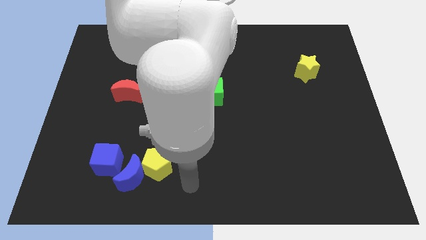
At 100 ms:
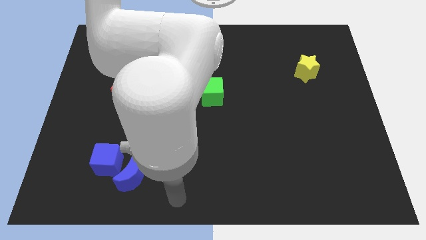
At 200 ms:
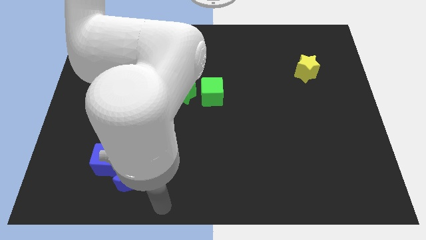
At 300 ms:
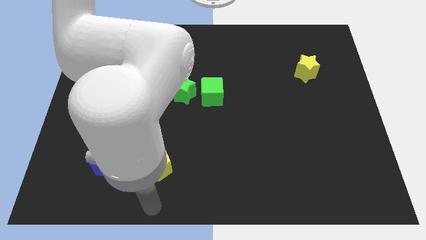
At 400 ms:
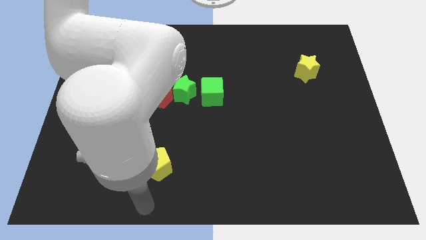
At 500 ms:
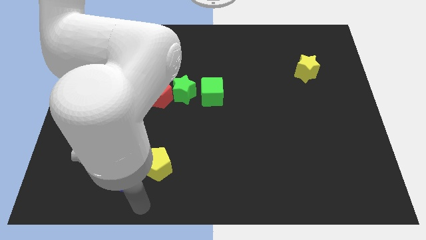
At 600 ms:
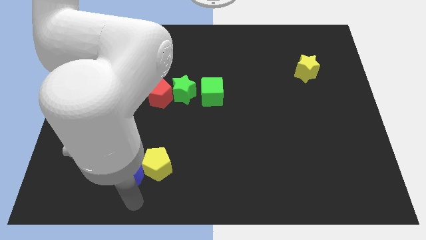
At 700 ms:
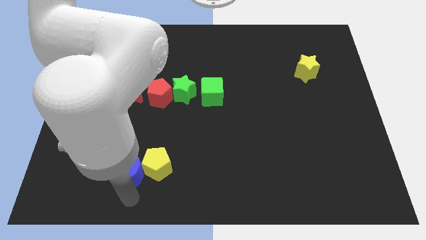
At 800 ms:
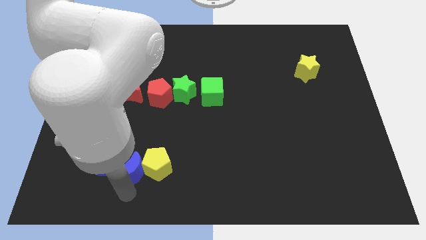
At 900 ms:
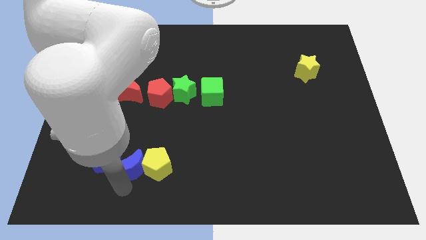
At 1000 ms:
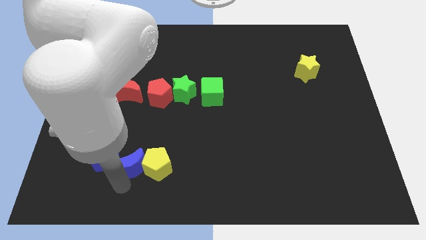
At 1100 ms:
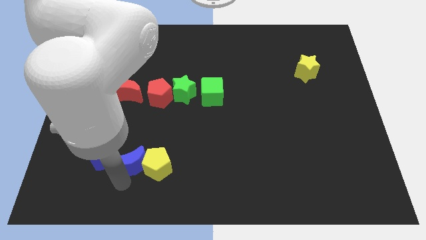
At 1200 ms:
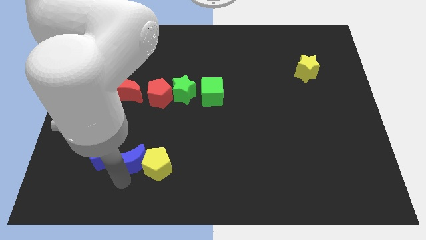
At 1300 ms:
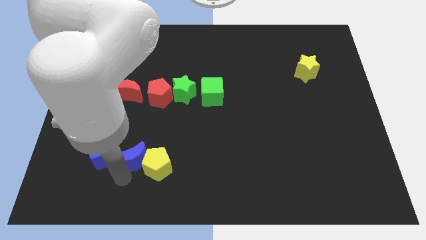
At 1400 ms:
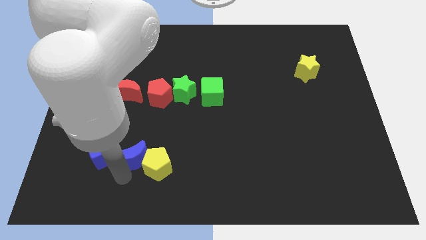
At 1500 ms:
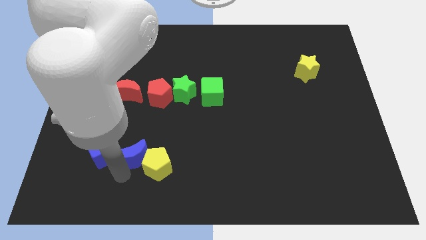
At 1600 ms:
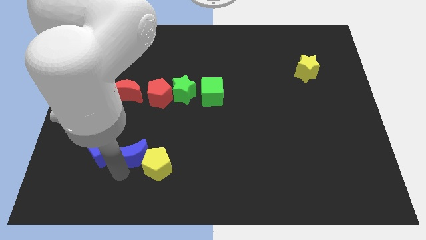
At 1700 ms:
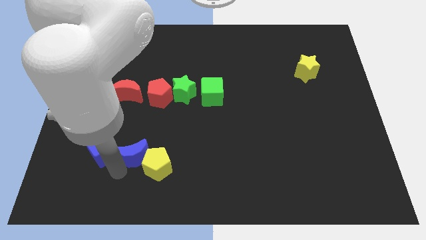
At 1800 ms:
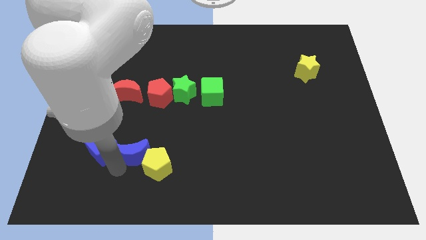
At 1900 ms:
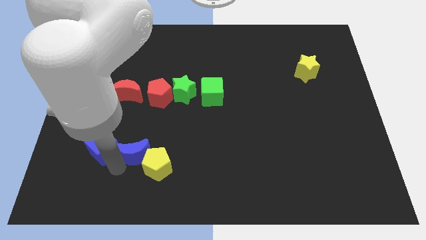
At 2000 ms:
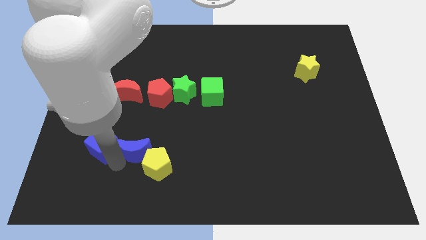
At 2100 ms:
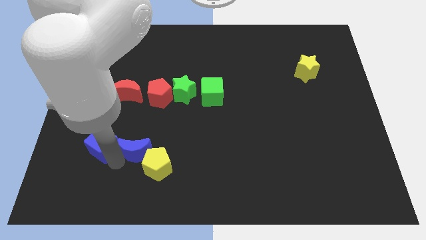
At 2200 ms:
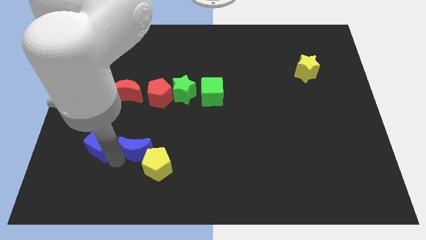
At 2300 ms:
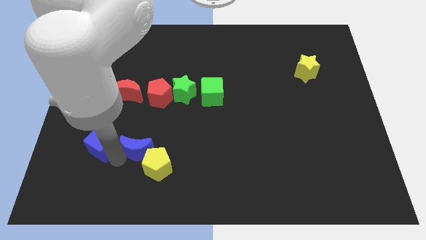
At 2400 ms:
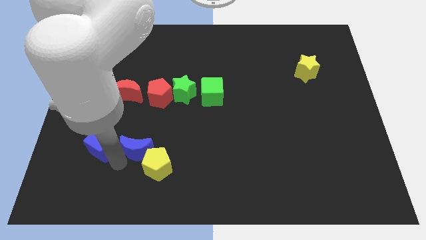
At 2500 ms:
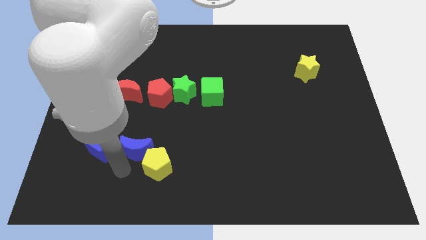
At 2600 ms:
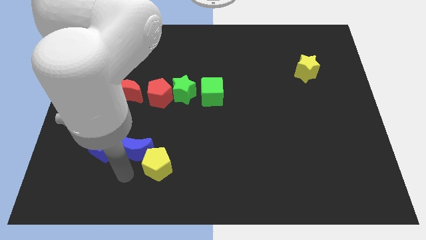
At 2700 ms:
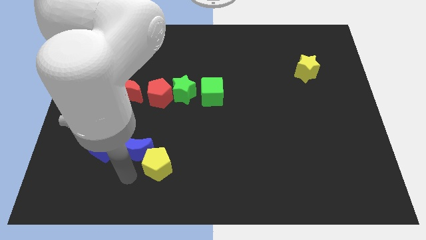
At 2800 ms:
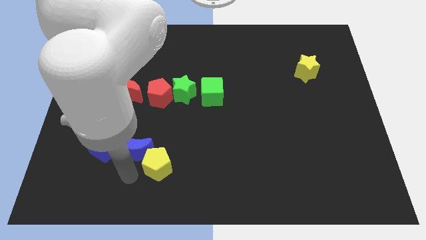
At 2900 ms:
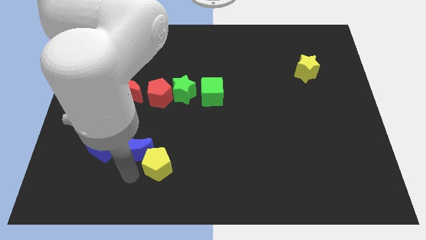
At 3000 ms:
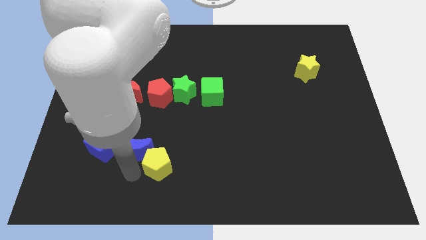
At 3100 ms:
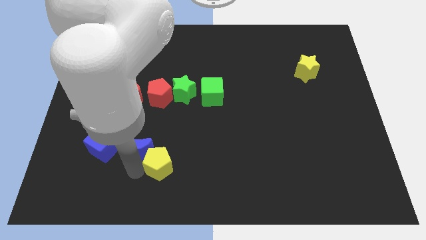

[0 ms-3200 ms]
slide blue moon to the top left of yellow pentagon

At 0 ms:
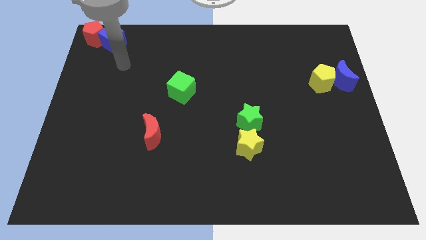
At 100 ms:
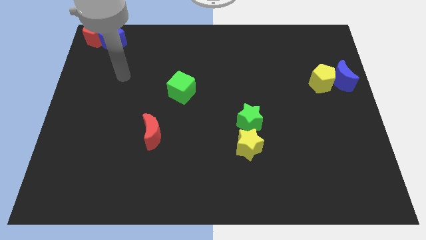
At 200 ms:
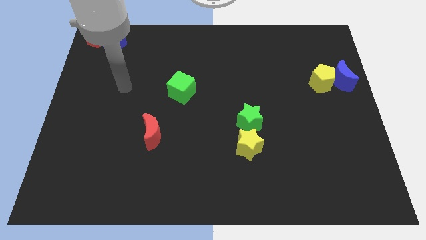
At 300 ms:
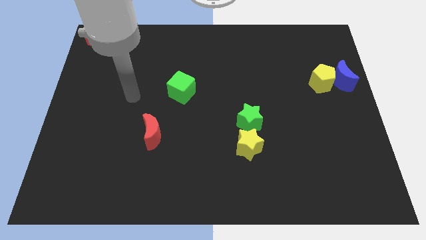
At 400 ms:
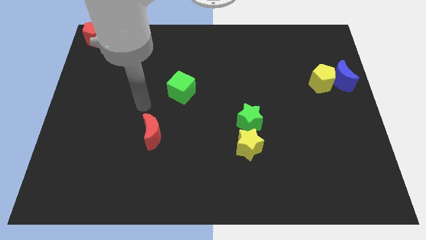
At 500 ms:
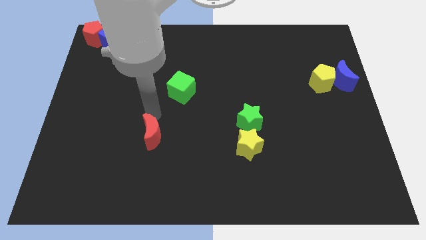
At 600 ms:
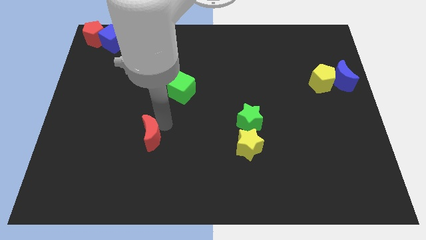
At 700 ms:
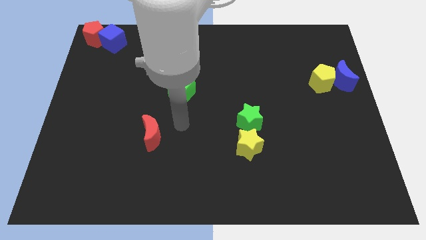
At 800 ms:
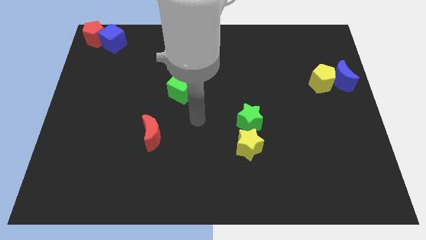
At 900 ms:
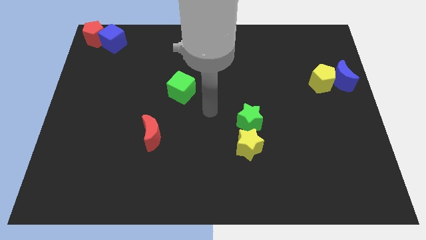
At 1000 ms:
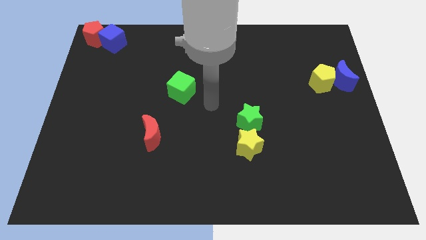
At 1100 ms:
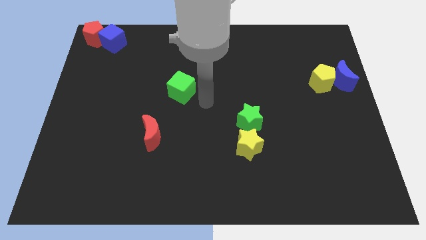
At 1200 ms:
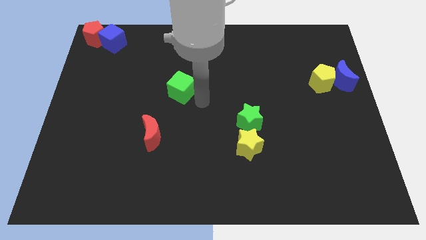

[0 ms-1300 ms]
place your hand close to the right side of the green cube

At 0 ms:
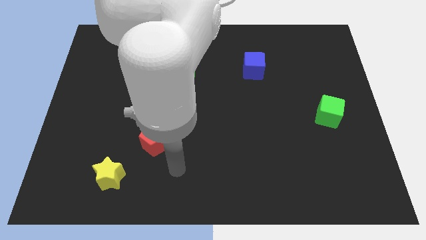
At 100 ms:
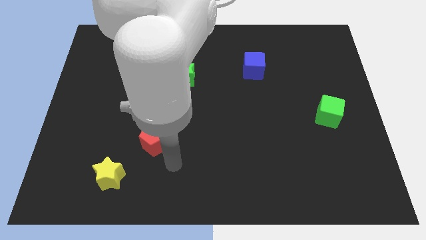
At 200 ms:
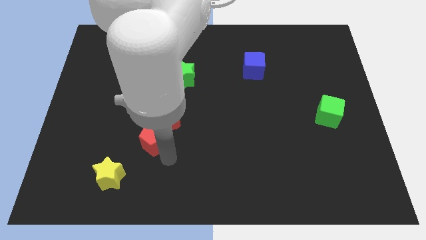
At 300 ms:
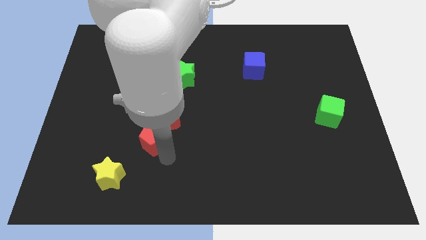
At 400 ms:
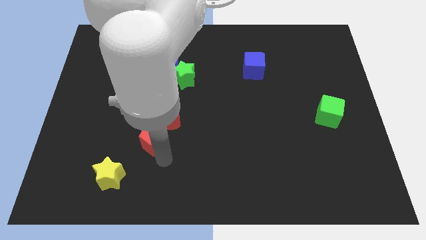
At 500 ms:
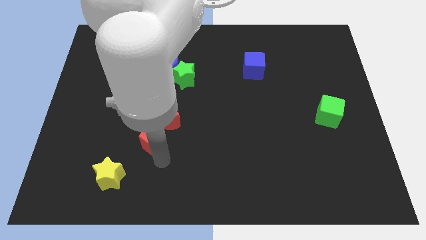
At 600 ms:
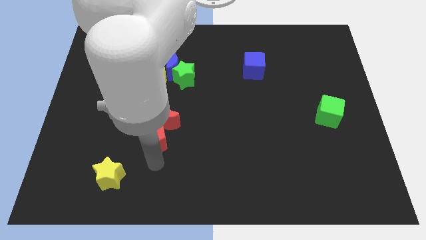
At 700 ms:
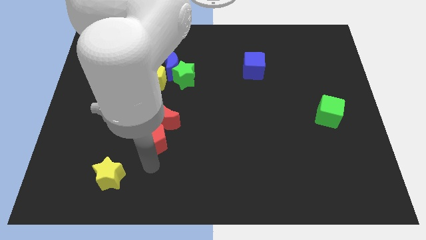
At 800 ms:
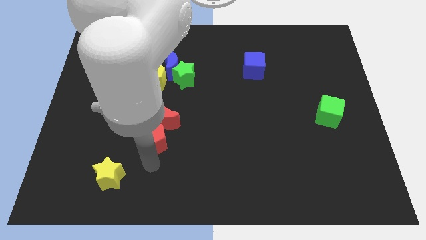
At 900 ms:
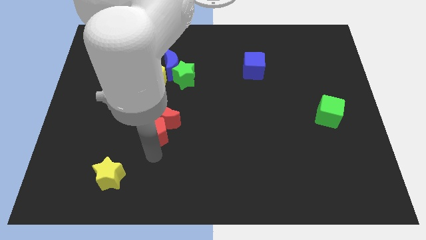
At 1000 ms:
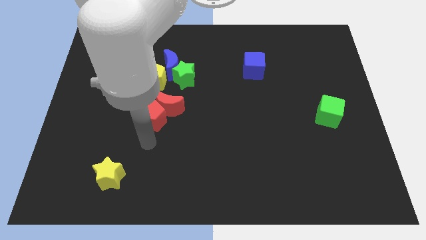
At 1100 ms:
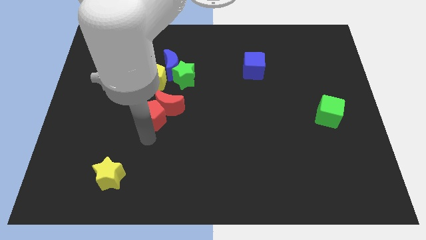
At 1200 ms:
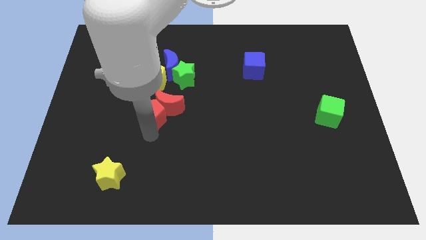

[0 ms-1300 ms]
push the red pentagon into the red moon

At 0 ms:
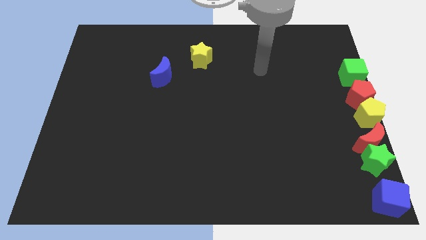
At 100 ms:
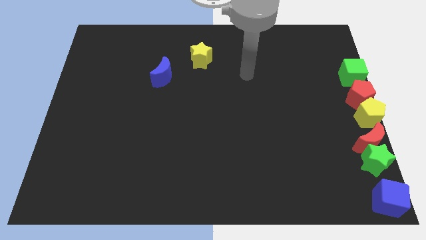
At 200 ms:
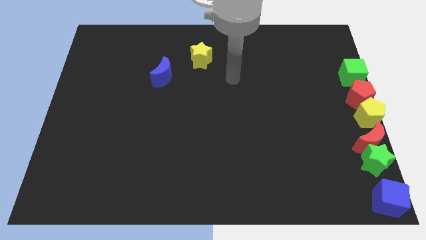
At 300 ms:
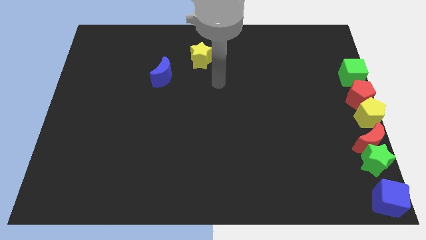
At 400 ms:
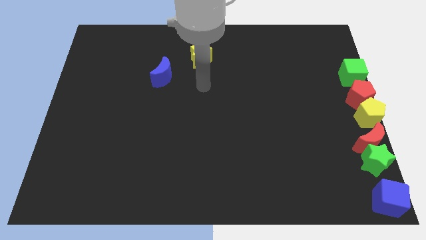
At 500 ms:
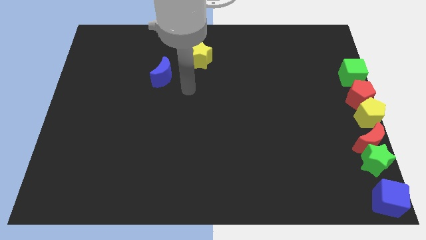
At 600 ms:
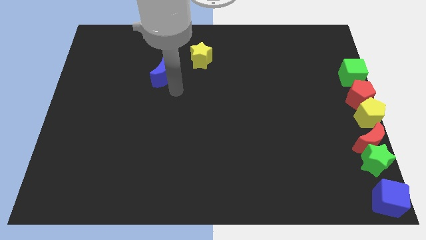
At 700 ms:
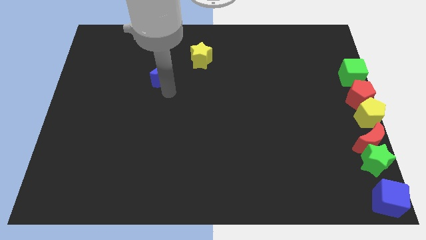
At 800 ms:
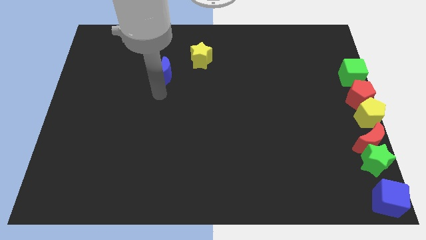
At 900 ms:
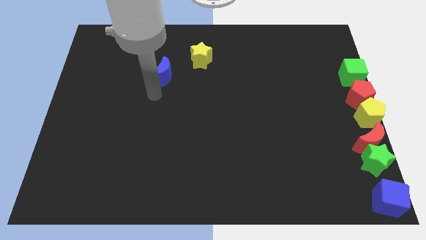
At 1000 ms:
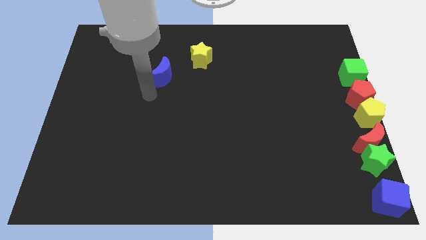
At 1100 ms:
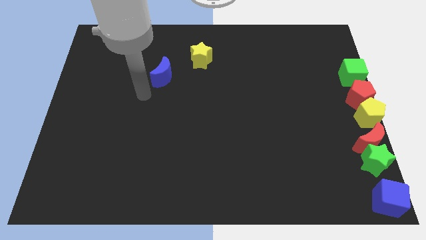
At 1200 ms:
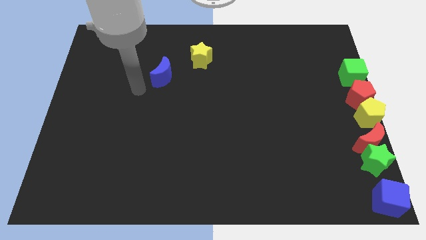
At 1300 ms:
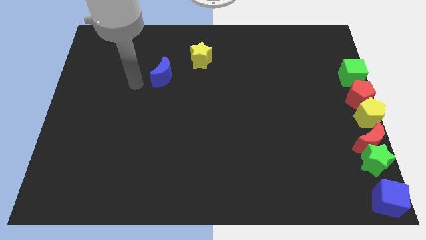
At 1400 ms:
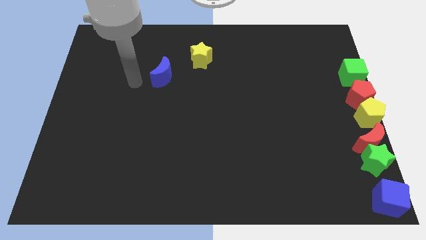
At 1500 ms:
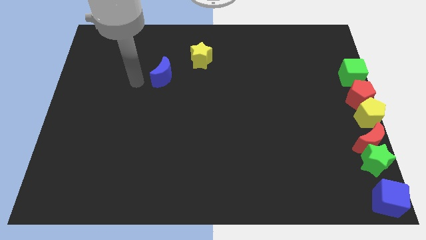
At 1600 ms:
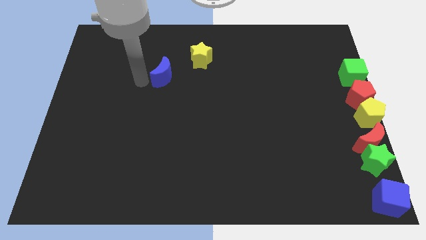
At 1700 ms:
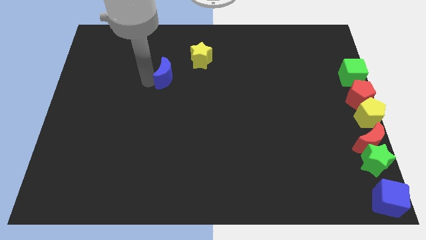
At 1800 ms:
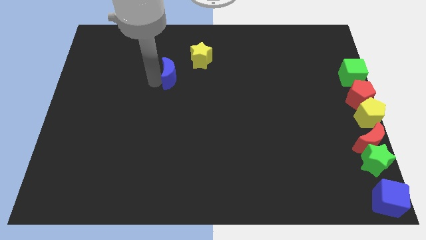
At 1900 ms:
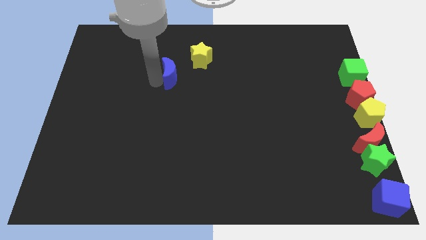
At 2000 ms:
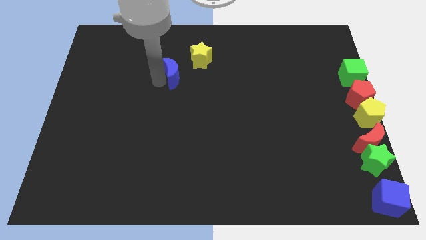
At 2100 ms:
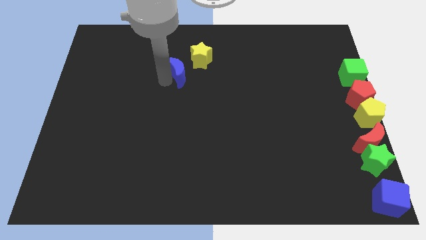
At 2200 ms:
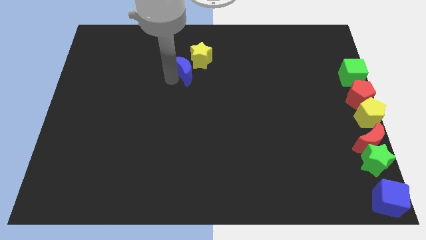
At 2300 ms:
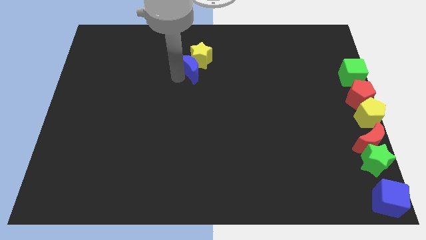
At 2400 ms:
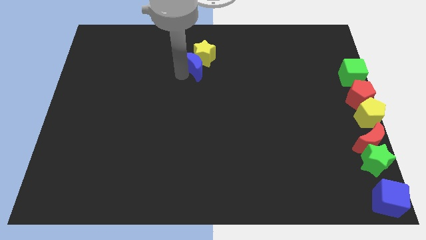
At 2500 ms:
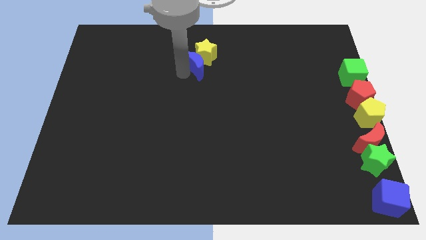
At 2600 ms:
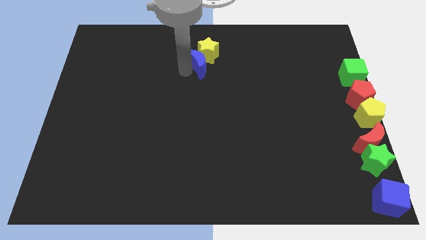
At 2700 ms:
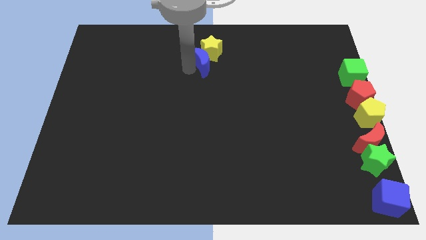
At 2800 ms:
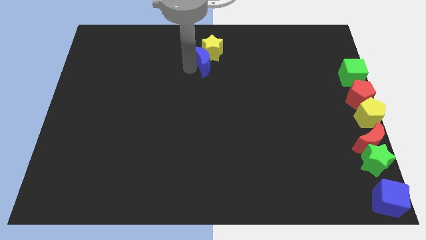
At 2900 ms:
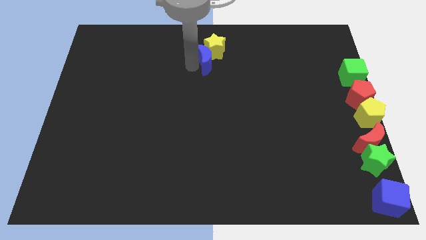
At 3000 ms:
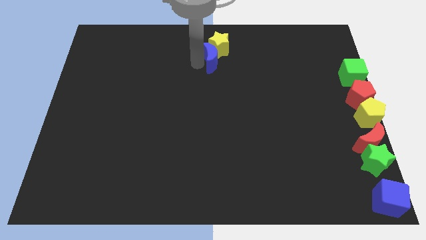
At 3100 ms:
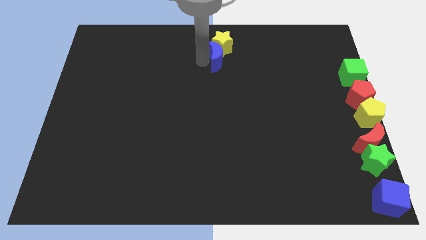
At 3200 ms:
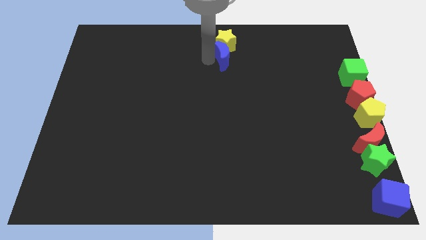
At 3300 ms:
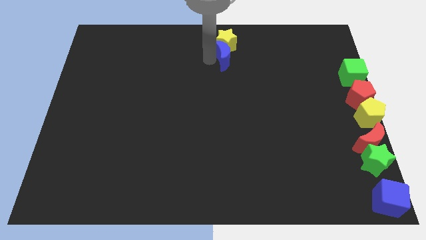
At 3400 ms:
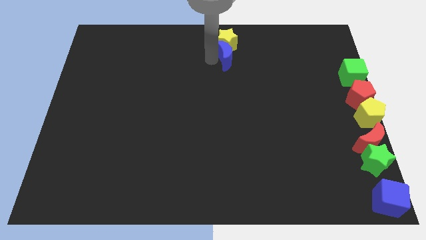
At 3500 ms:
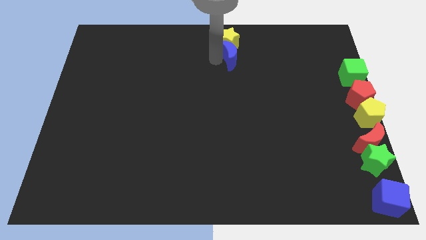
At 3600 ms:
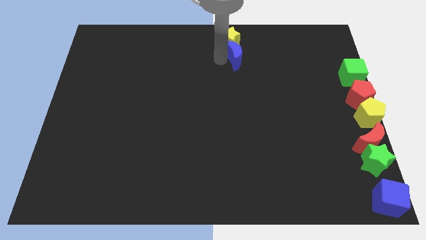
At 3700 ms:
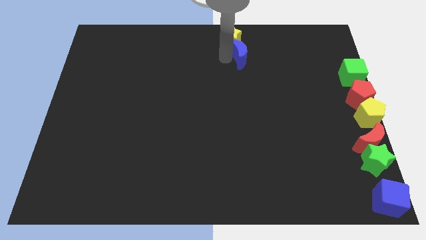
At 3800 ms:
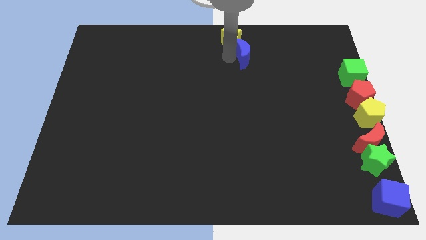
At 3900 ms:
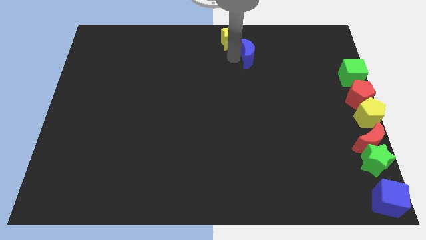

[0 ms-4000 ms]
move yellow star and blue moon to the top middle of the board
